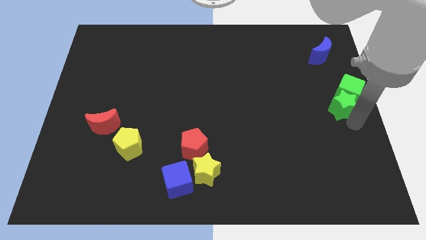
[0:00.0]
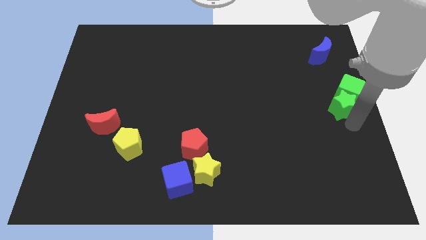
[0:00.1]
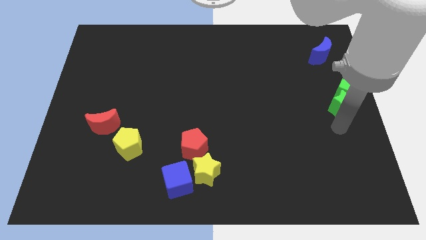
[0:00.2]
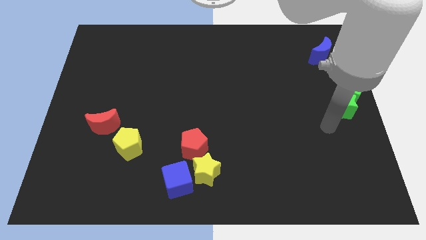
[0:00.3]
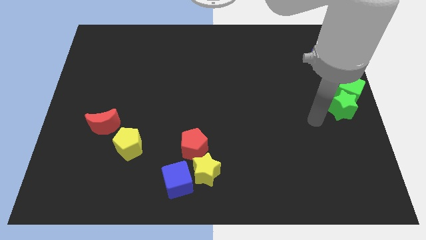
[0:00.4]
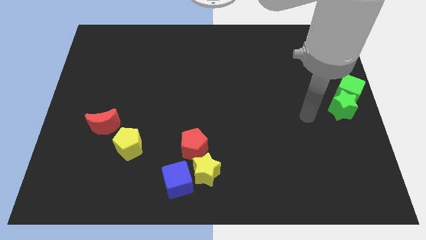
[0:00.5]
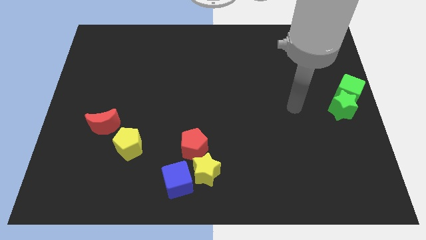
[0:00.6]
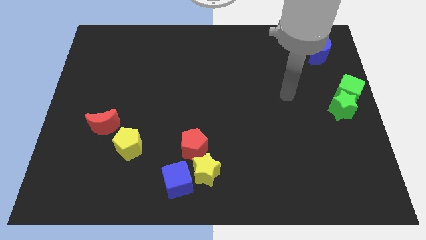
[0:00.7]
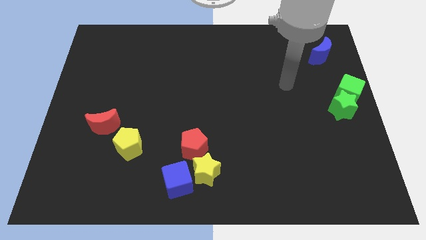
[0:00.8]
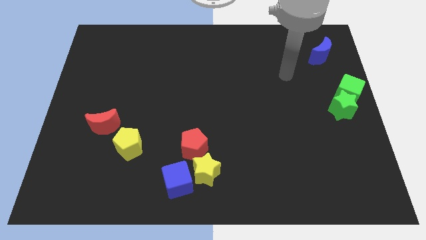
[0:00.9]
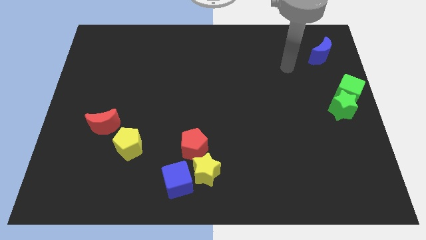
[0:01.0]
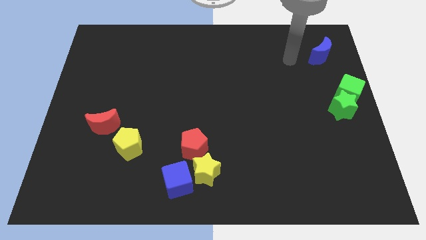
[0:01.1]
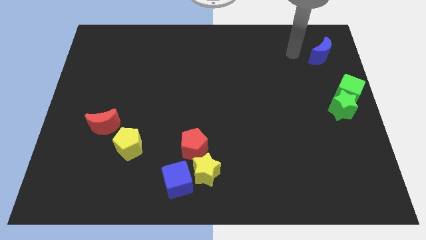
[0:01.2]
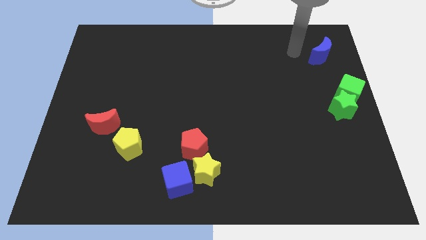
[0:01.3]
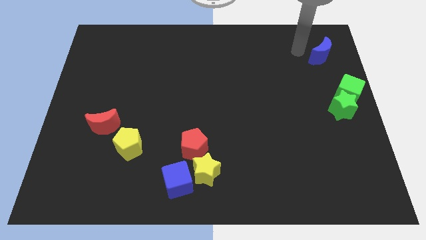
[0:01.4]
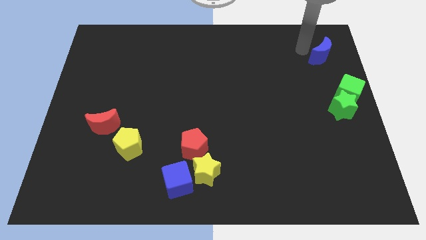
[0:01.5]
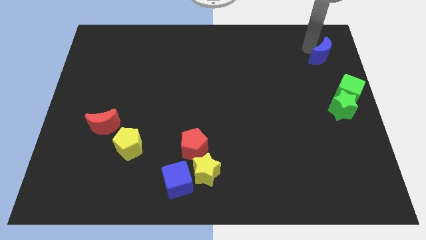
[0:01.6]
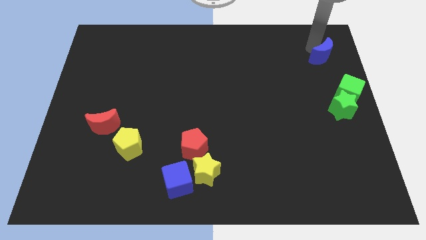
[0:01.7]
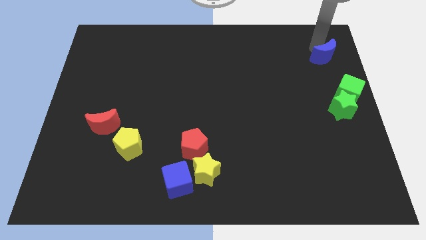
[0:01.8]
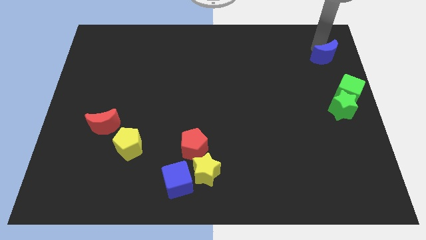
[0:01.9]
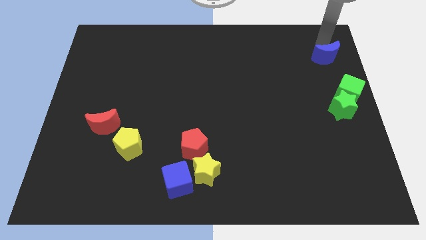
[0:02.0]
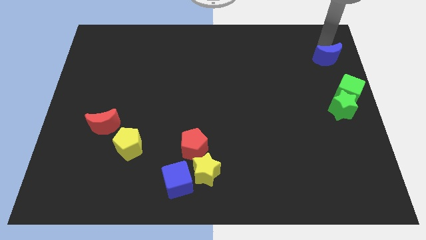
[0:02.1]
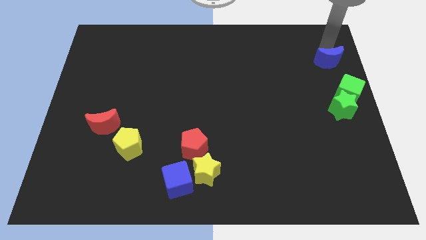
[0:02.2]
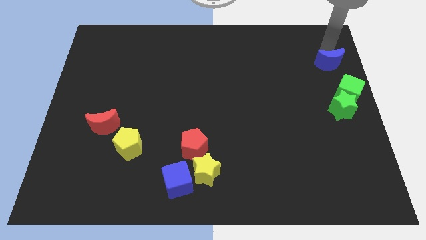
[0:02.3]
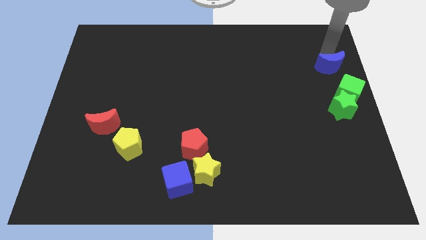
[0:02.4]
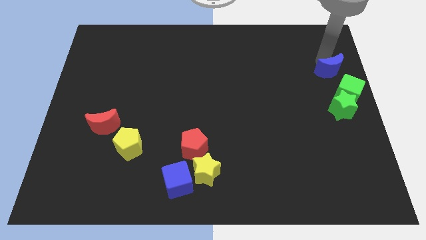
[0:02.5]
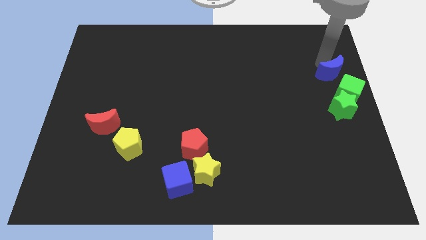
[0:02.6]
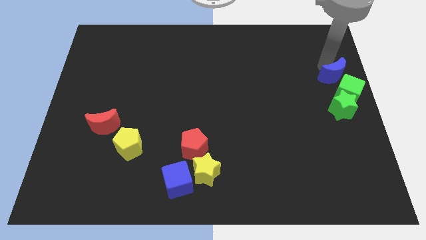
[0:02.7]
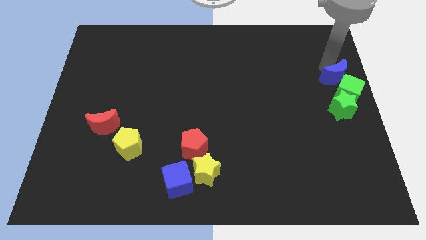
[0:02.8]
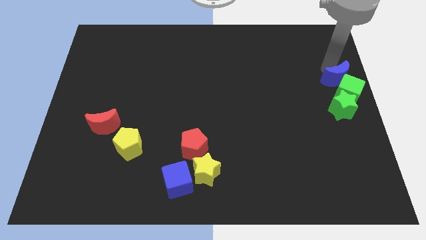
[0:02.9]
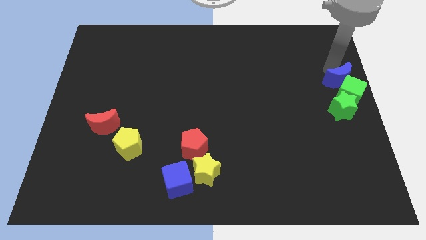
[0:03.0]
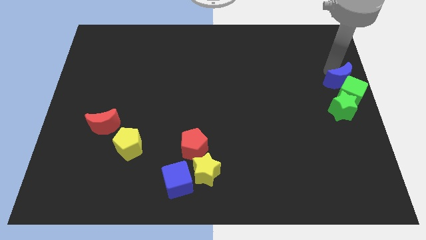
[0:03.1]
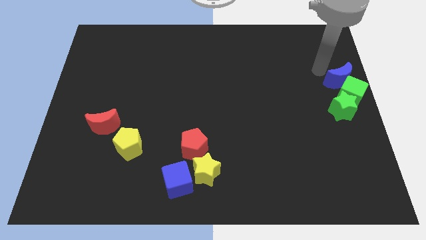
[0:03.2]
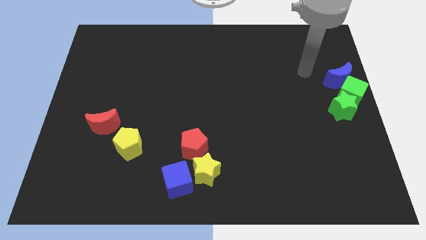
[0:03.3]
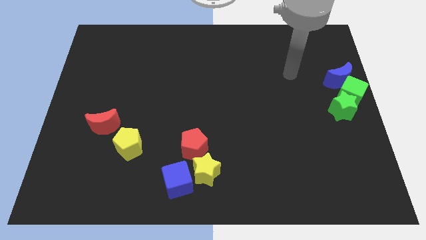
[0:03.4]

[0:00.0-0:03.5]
push the blue crescent into the green cube

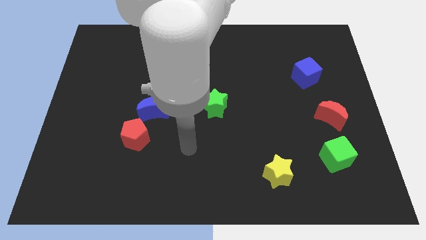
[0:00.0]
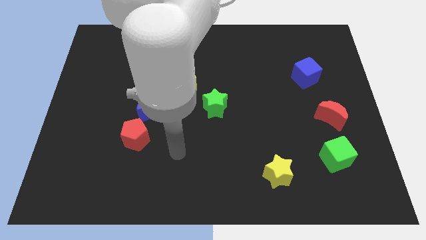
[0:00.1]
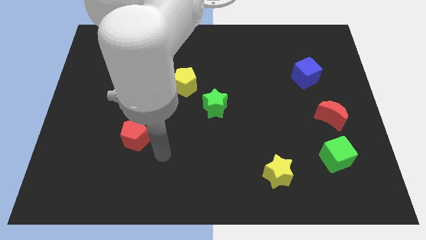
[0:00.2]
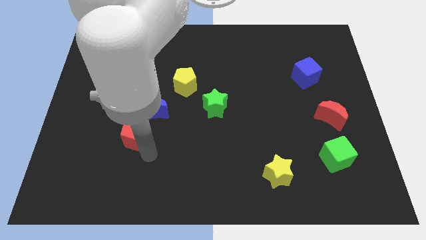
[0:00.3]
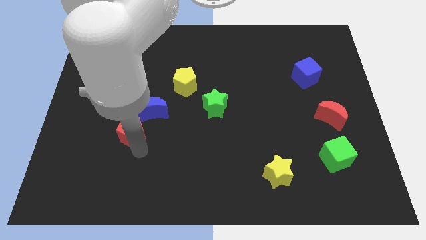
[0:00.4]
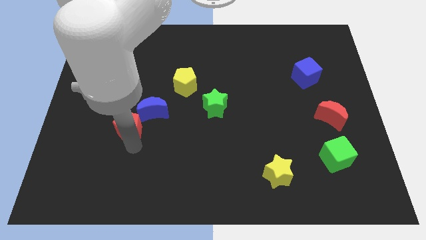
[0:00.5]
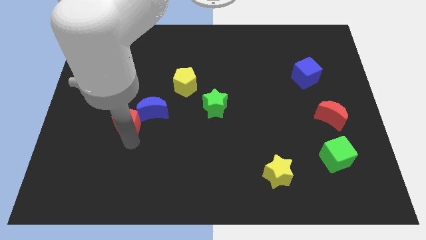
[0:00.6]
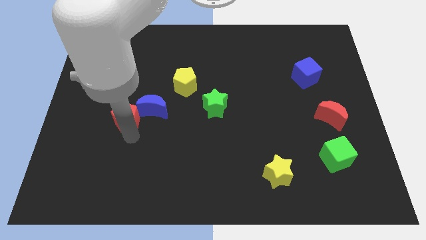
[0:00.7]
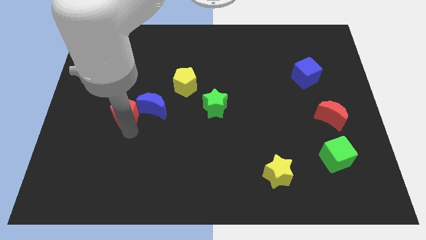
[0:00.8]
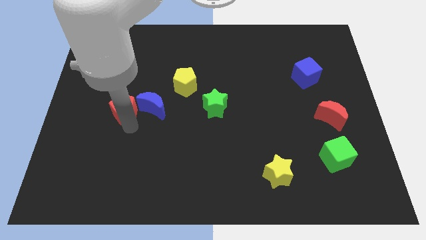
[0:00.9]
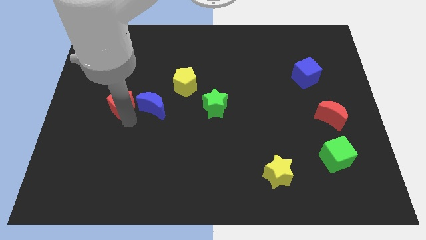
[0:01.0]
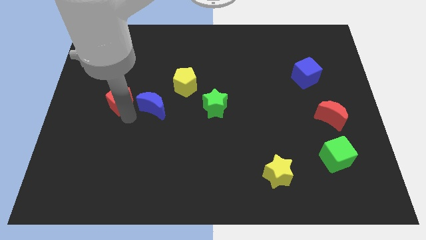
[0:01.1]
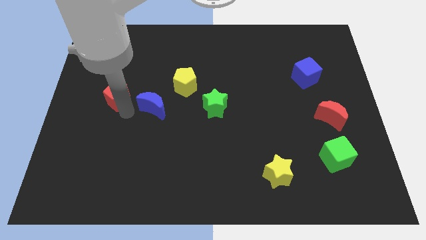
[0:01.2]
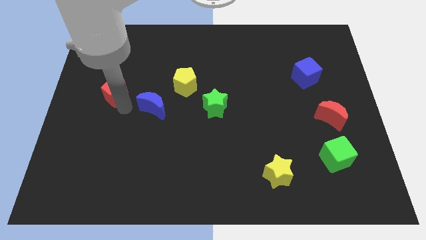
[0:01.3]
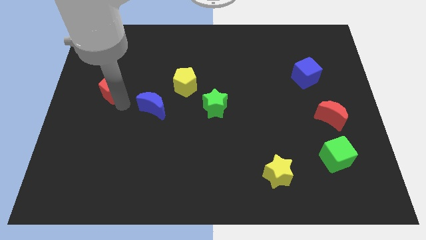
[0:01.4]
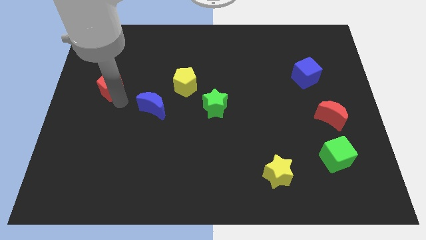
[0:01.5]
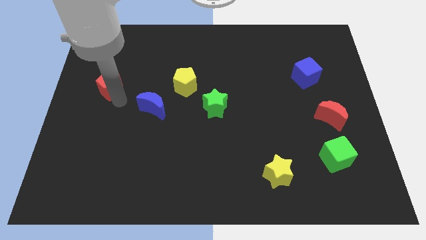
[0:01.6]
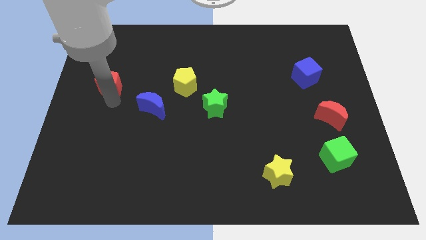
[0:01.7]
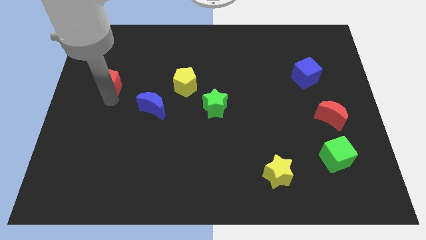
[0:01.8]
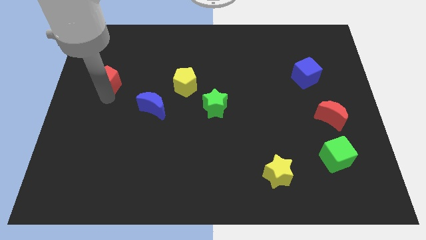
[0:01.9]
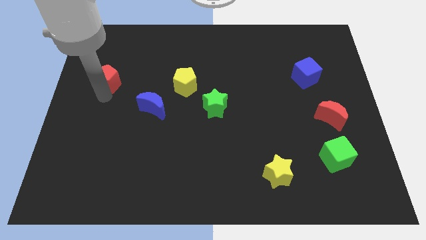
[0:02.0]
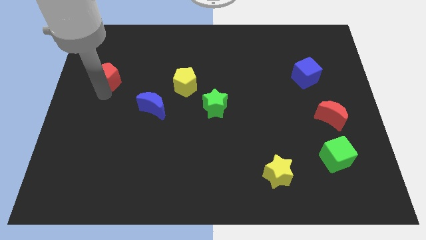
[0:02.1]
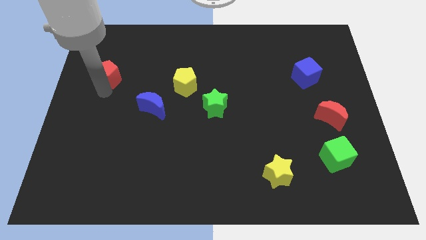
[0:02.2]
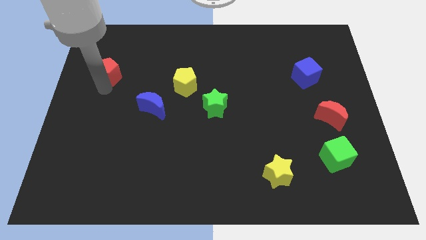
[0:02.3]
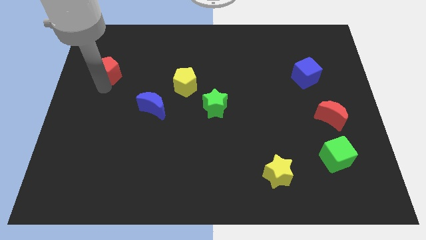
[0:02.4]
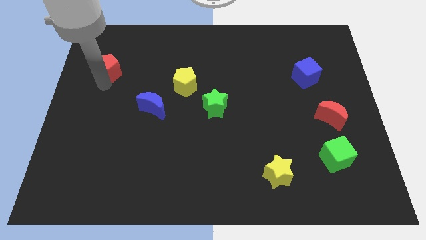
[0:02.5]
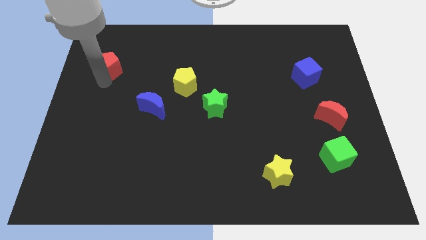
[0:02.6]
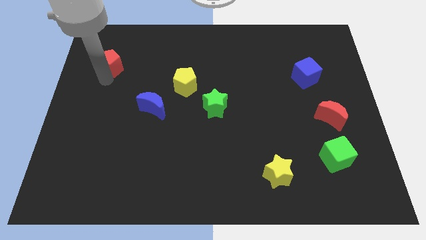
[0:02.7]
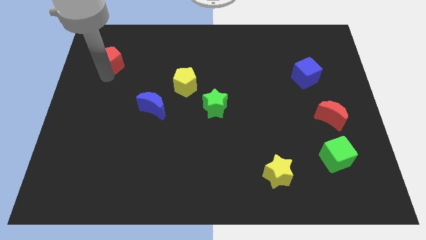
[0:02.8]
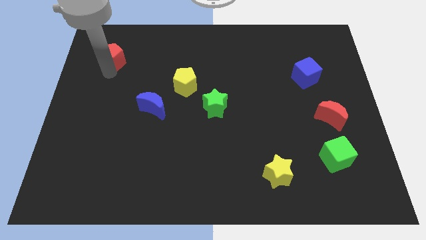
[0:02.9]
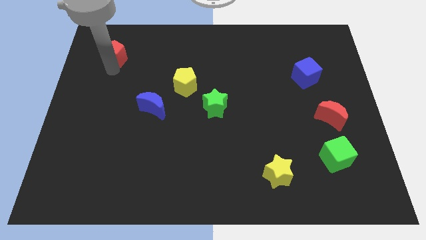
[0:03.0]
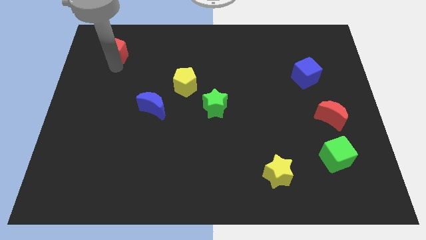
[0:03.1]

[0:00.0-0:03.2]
move the red pentagon towards the top left of the board

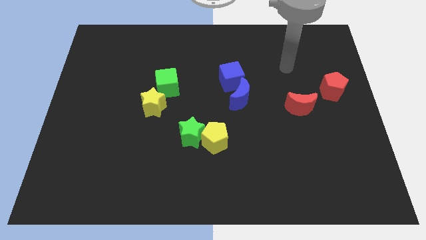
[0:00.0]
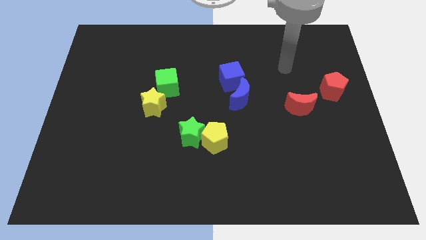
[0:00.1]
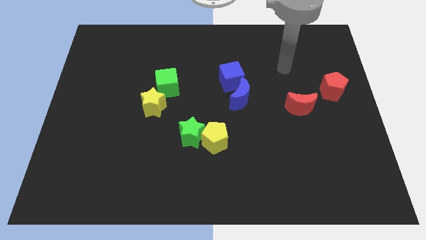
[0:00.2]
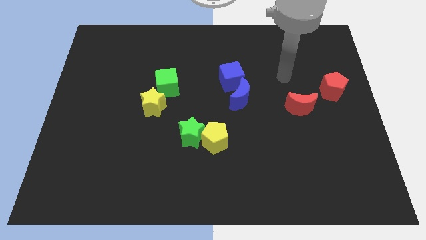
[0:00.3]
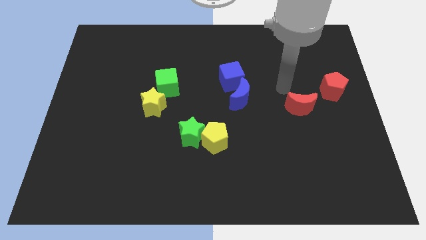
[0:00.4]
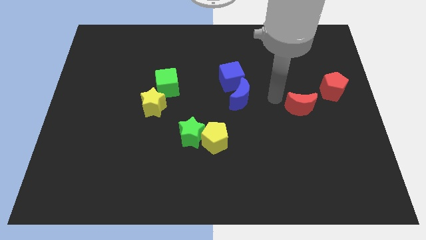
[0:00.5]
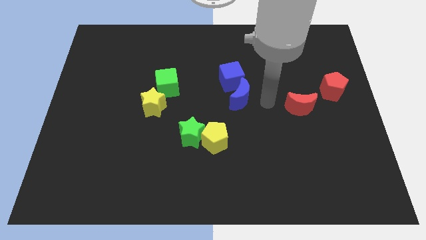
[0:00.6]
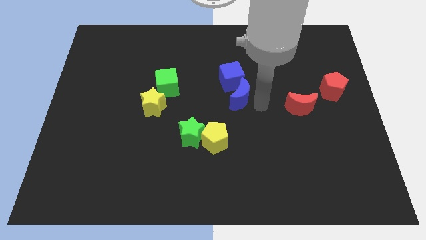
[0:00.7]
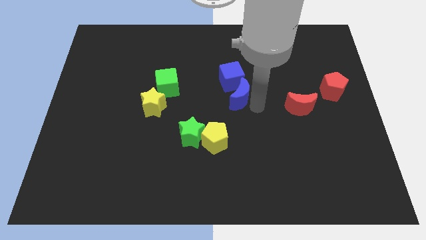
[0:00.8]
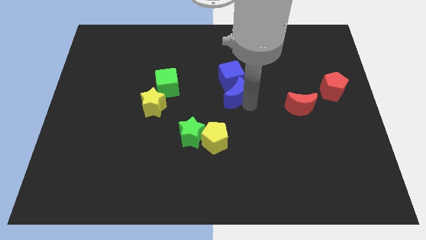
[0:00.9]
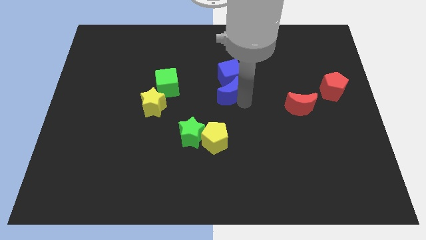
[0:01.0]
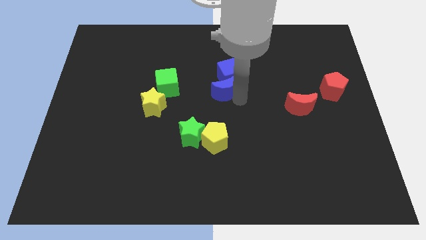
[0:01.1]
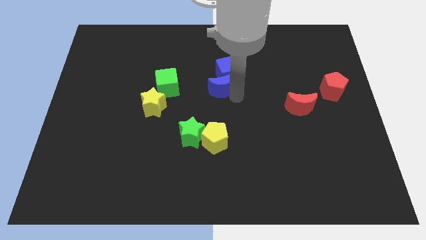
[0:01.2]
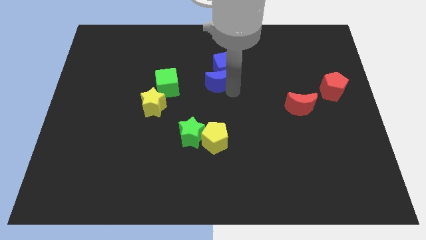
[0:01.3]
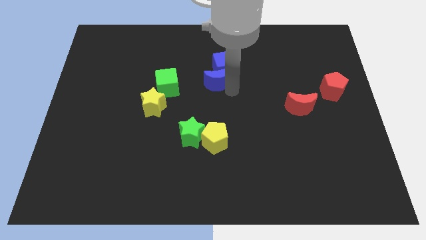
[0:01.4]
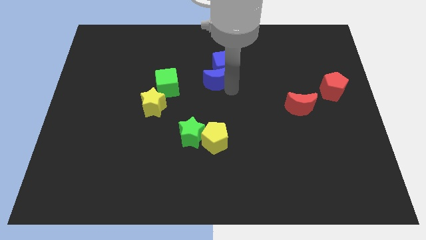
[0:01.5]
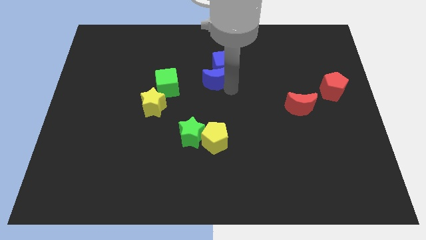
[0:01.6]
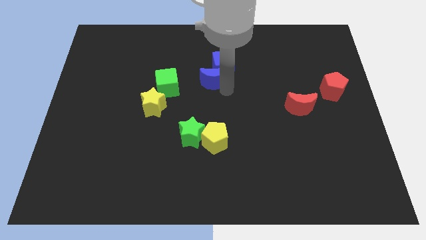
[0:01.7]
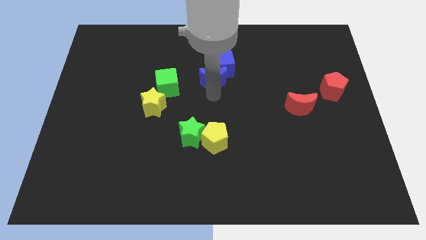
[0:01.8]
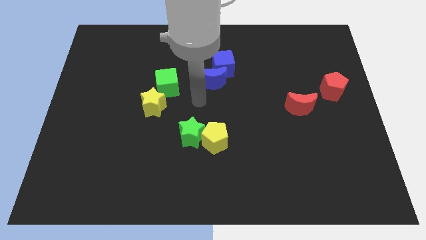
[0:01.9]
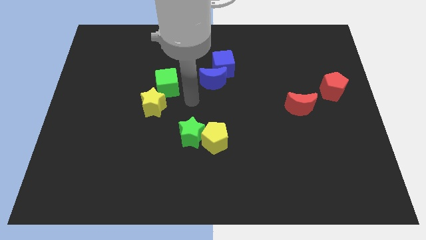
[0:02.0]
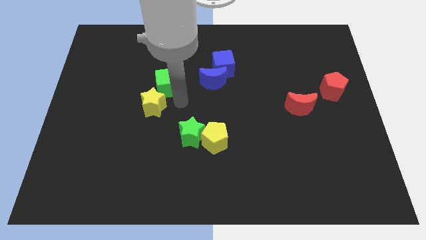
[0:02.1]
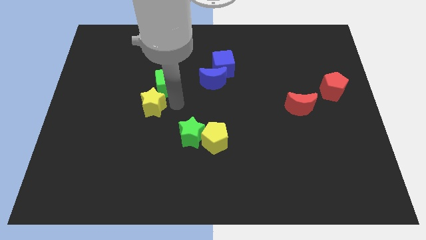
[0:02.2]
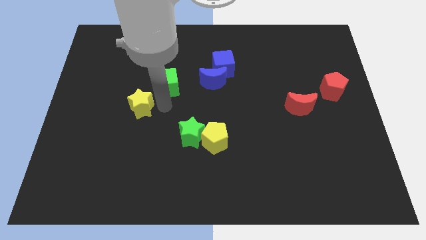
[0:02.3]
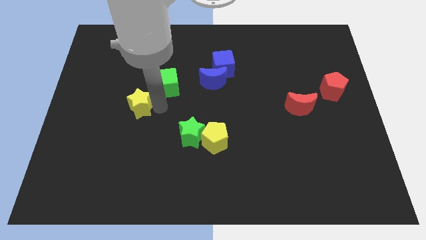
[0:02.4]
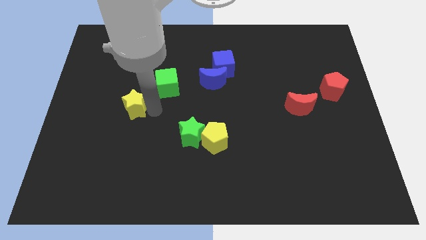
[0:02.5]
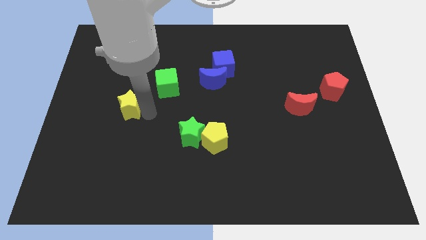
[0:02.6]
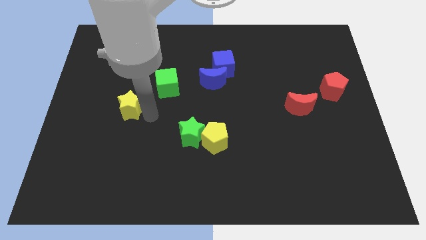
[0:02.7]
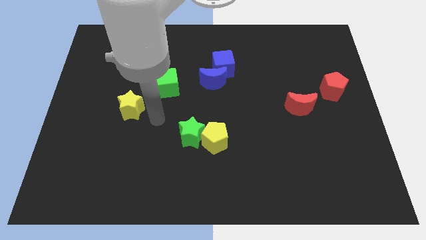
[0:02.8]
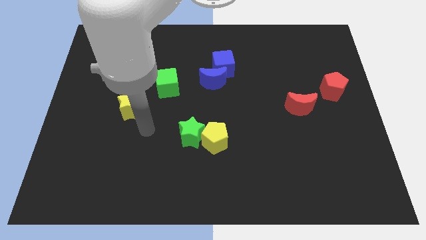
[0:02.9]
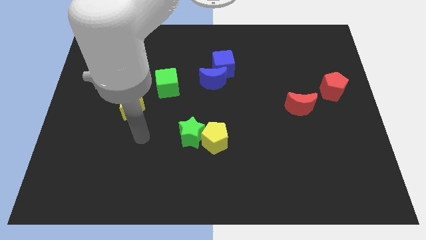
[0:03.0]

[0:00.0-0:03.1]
place the arm below the yellow star
